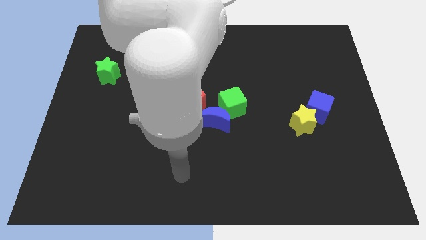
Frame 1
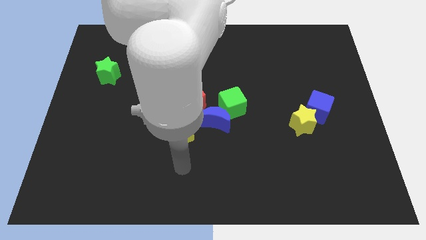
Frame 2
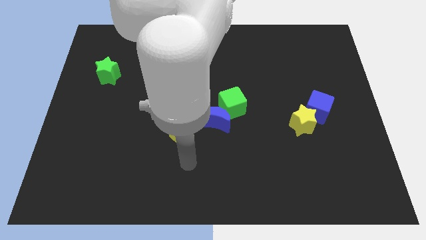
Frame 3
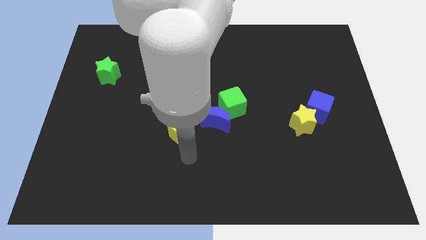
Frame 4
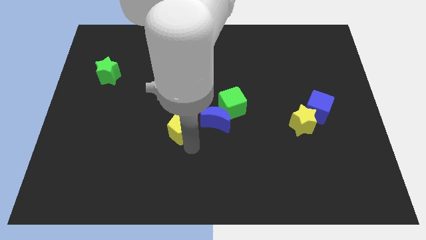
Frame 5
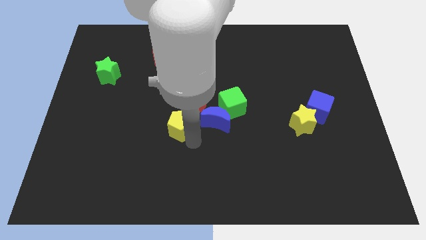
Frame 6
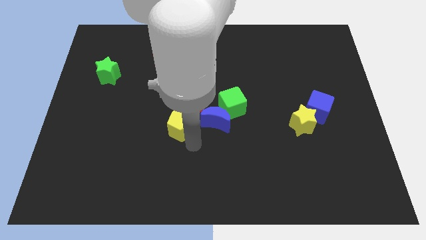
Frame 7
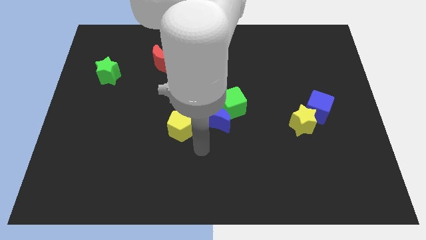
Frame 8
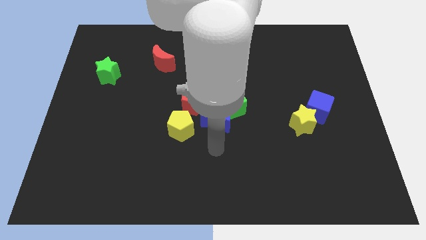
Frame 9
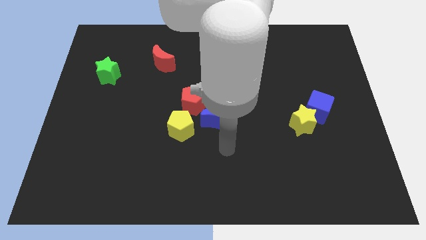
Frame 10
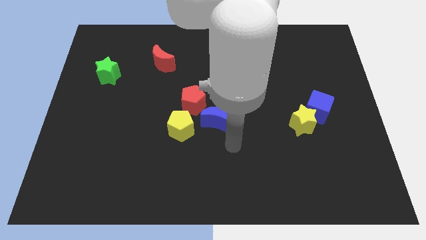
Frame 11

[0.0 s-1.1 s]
push yellow pentagon slightly towards top side

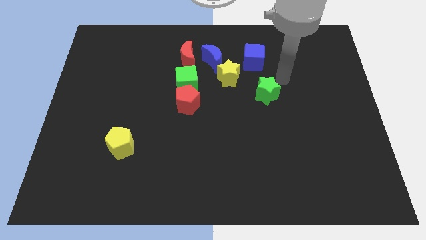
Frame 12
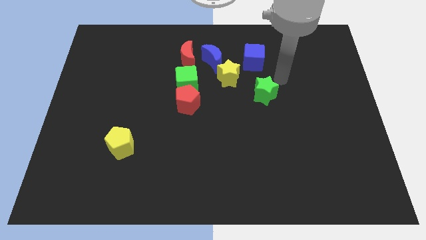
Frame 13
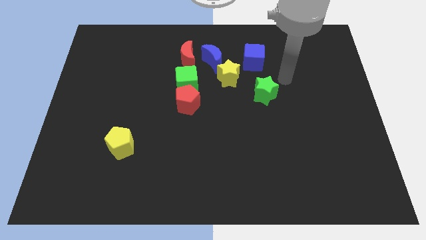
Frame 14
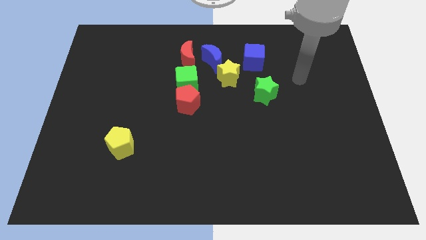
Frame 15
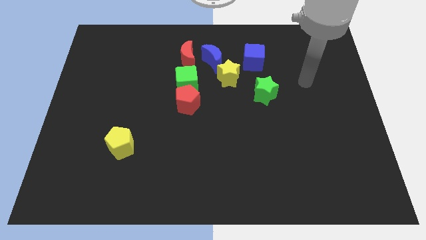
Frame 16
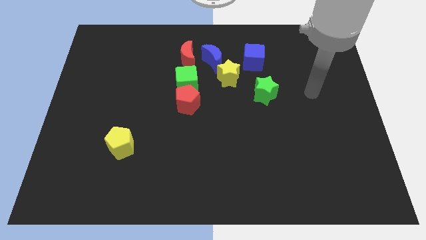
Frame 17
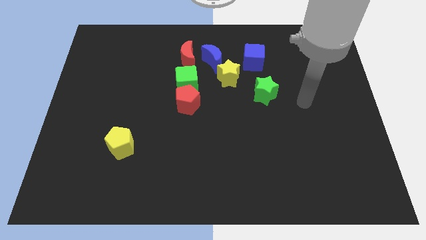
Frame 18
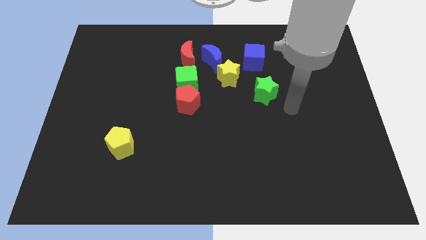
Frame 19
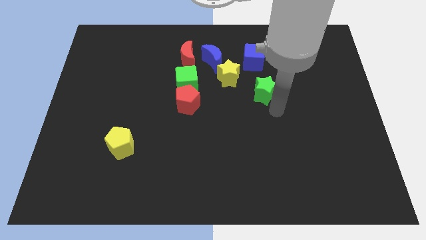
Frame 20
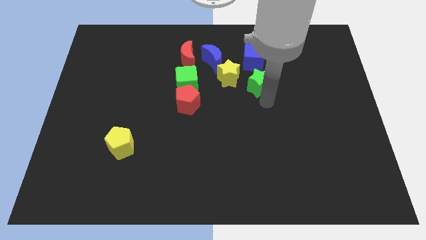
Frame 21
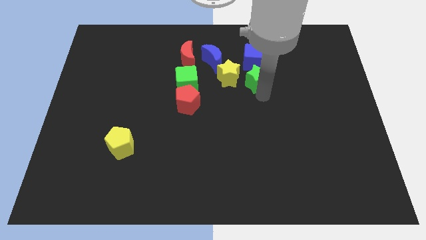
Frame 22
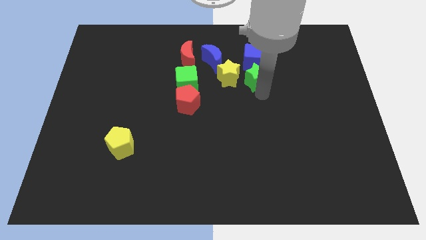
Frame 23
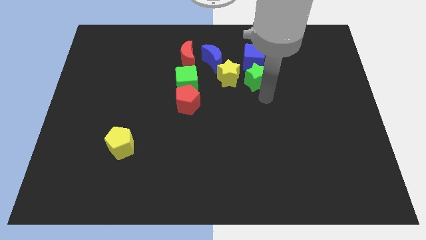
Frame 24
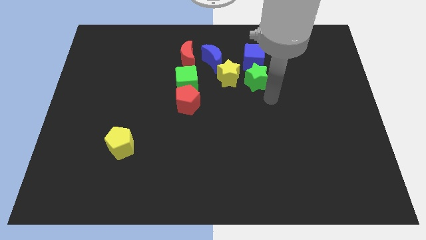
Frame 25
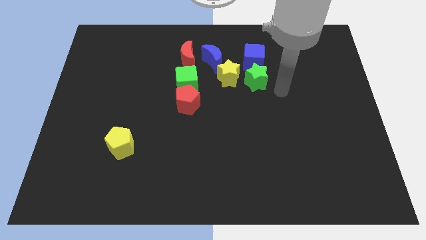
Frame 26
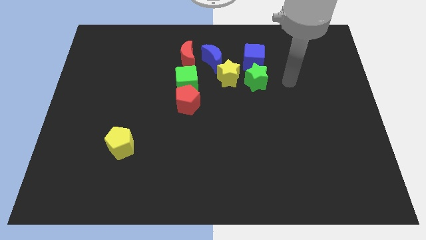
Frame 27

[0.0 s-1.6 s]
move the green star on the right side of the yellow star

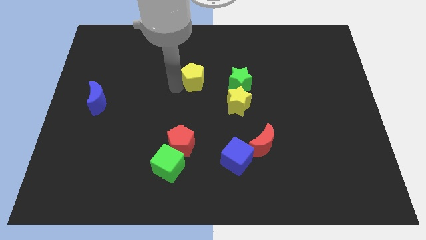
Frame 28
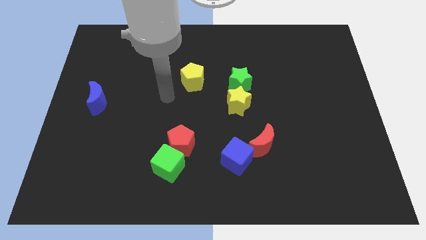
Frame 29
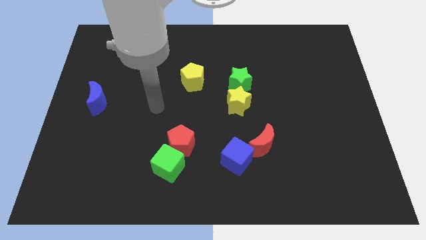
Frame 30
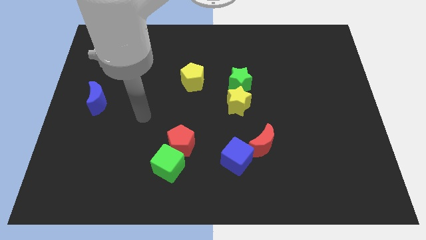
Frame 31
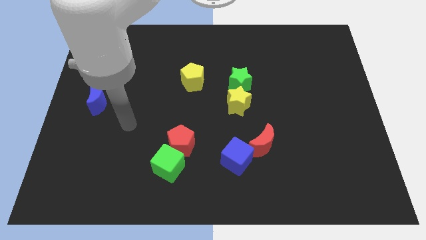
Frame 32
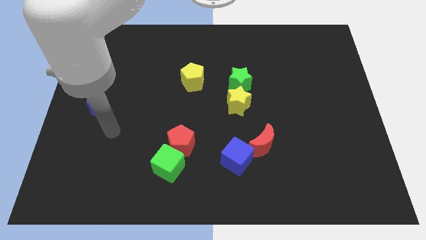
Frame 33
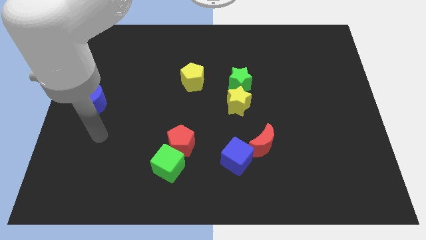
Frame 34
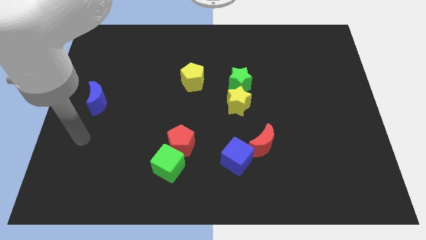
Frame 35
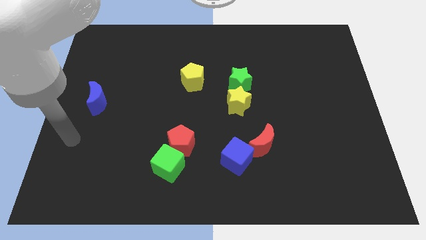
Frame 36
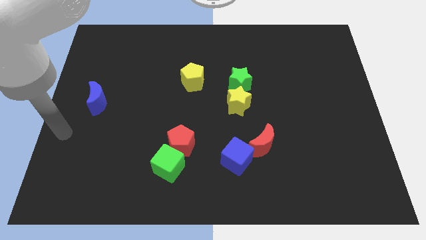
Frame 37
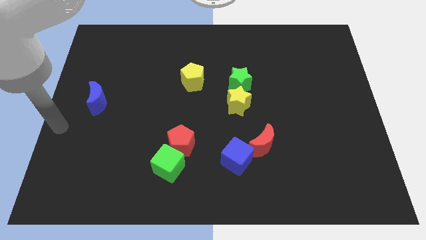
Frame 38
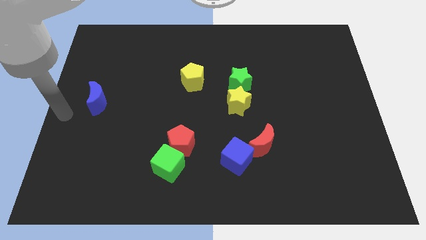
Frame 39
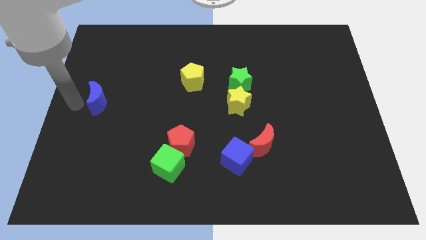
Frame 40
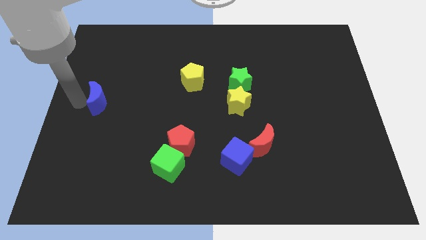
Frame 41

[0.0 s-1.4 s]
point your arm at the left of the blue crescent

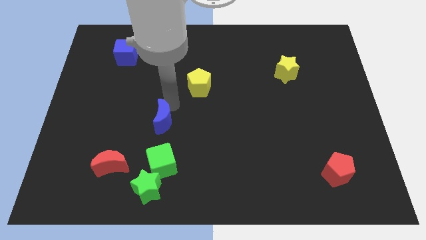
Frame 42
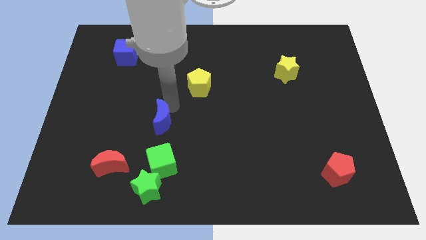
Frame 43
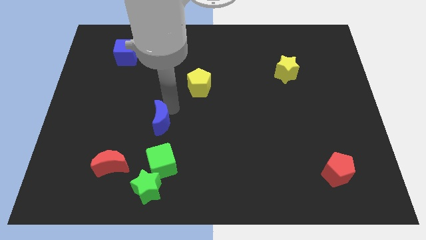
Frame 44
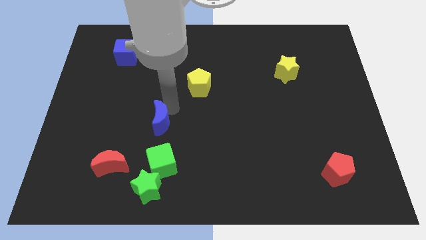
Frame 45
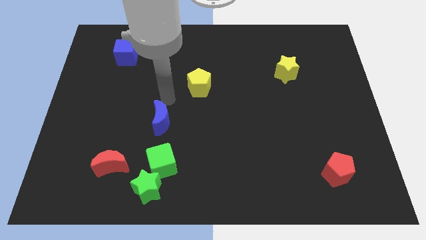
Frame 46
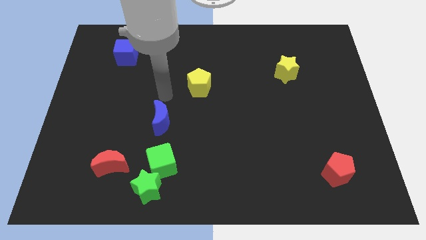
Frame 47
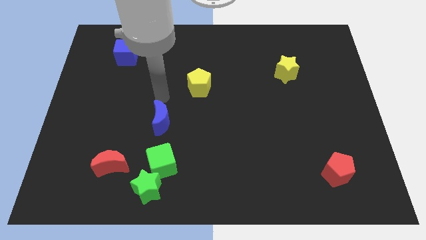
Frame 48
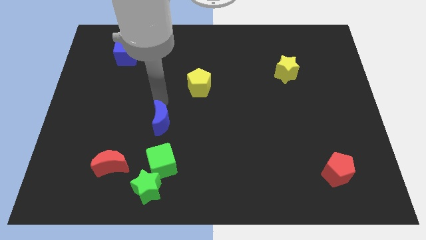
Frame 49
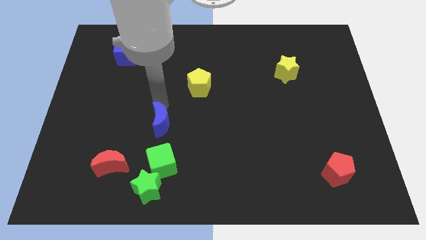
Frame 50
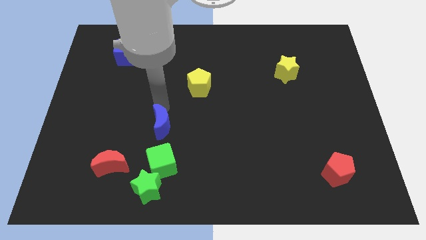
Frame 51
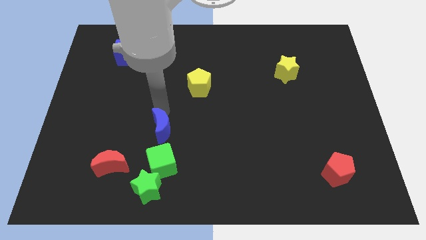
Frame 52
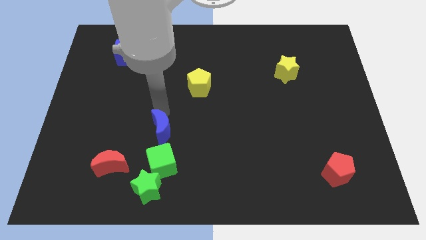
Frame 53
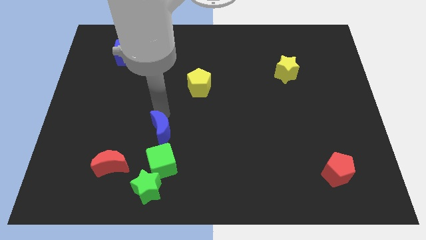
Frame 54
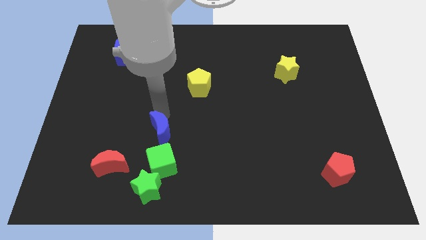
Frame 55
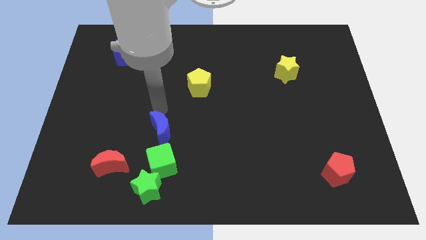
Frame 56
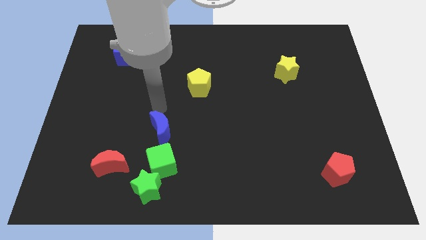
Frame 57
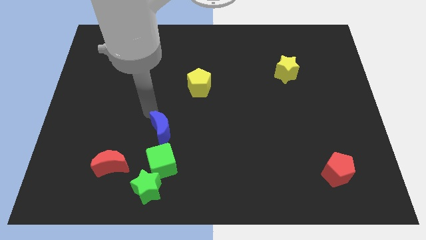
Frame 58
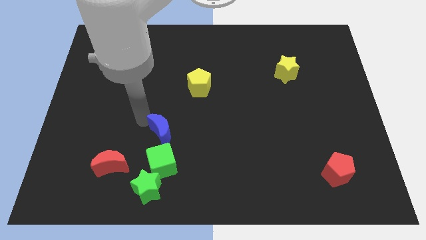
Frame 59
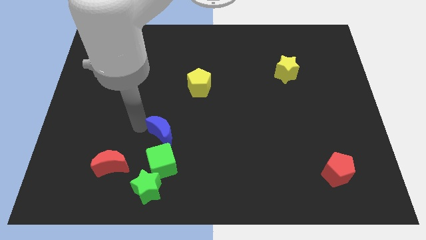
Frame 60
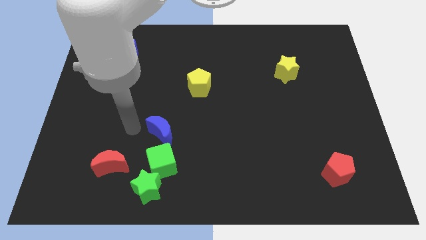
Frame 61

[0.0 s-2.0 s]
place the blue crescent above the green cube

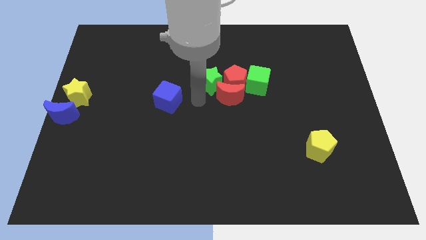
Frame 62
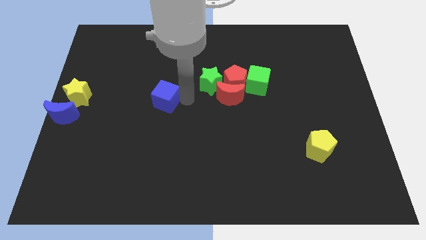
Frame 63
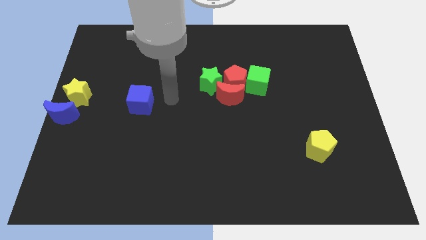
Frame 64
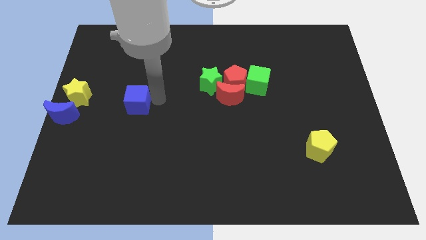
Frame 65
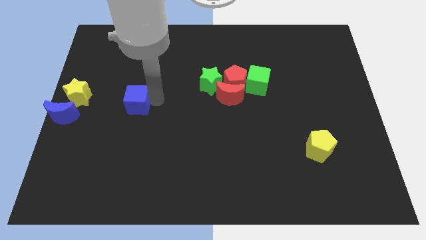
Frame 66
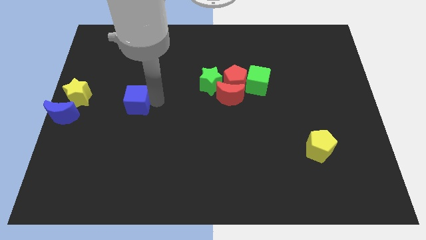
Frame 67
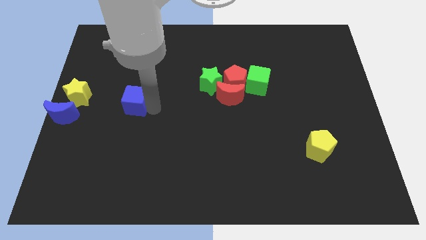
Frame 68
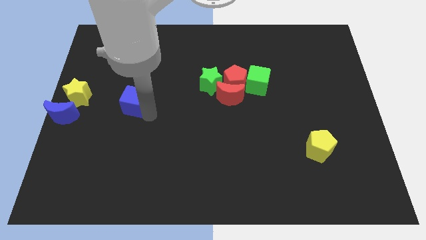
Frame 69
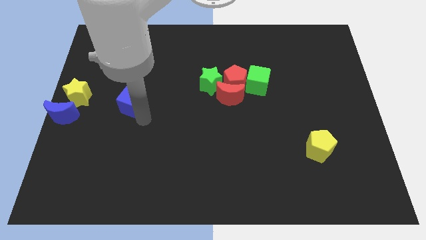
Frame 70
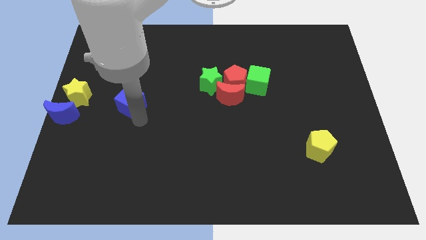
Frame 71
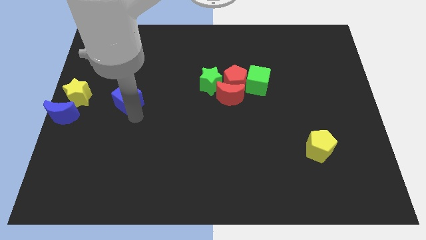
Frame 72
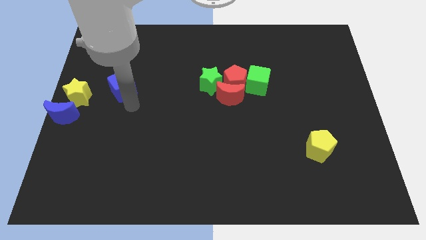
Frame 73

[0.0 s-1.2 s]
place the blue cube to the right of the yellow star

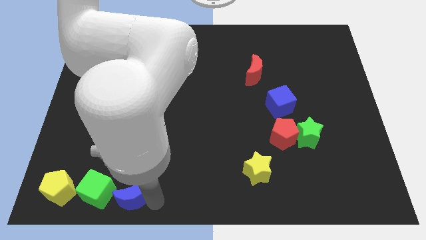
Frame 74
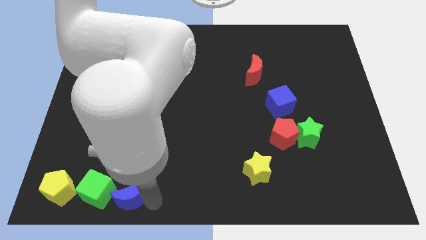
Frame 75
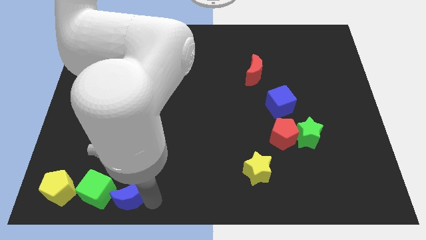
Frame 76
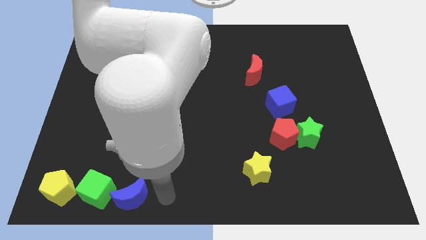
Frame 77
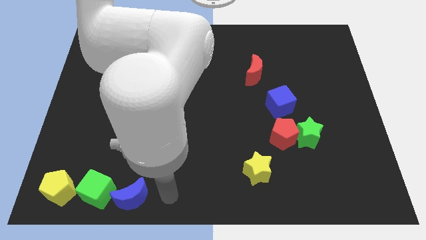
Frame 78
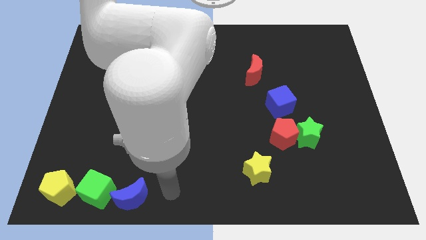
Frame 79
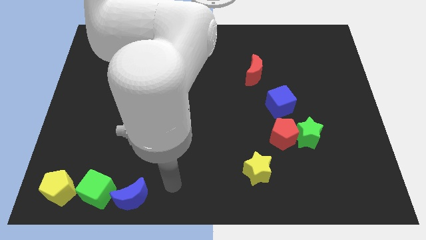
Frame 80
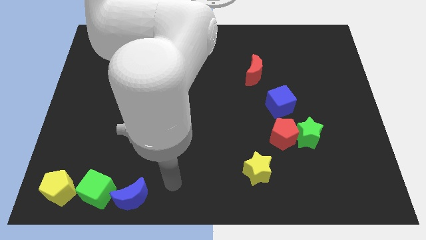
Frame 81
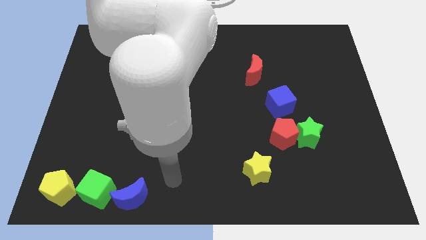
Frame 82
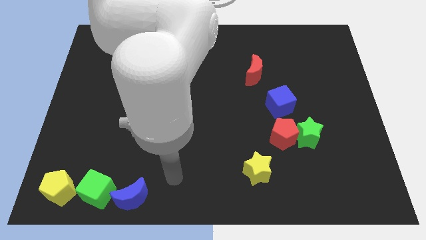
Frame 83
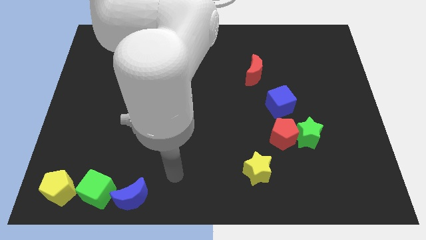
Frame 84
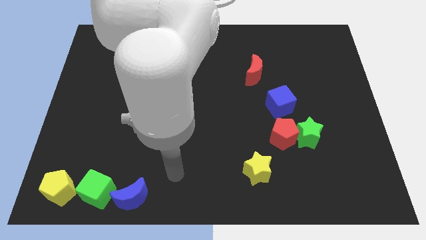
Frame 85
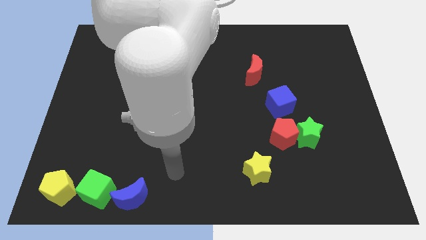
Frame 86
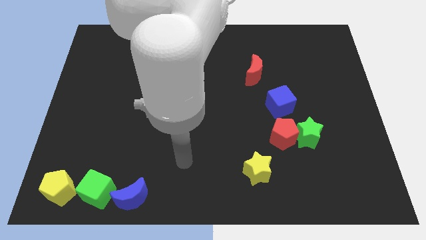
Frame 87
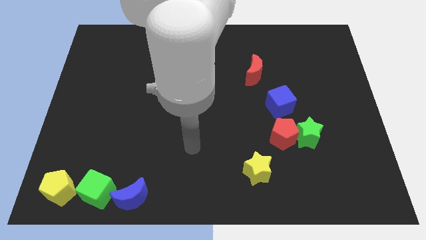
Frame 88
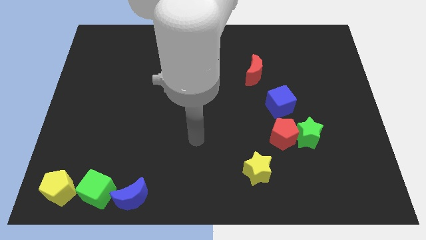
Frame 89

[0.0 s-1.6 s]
move blue crescent into green cube
